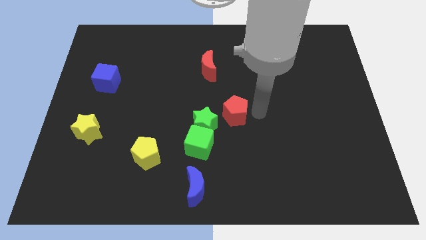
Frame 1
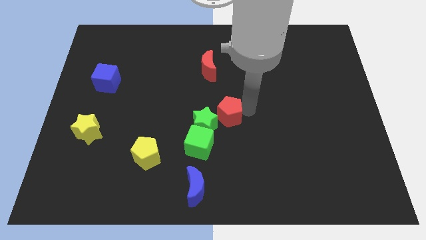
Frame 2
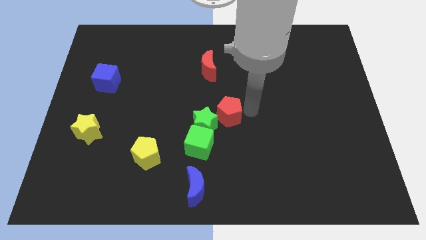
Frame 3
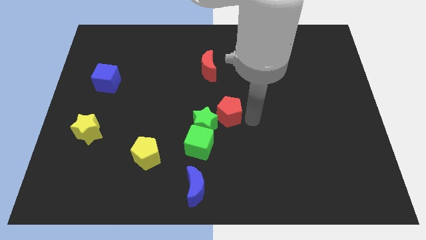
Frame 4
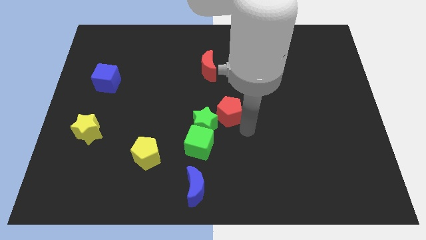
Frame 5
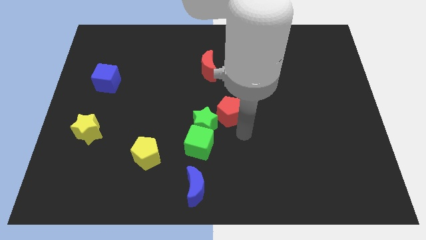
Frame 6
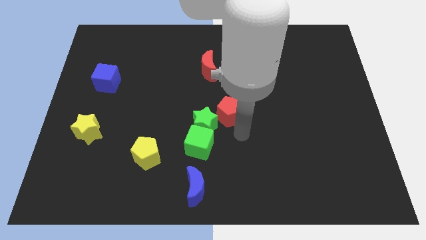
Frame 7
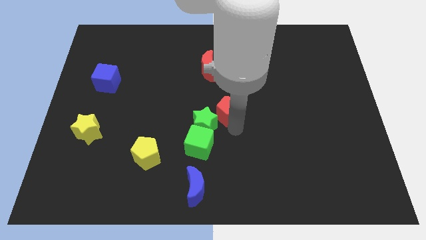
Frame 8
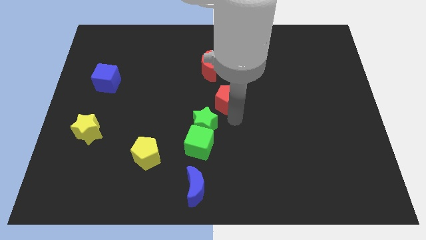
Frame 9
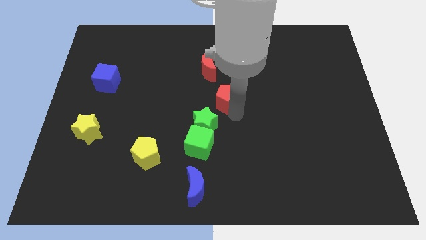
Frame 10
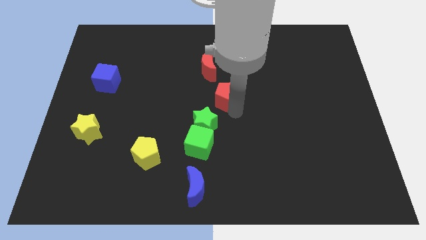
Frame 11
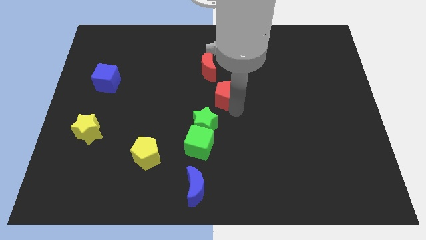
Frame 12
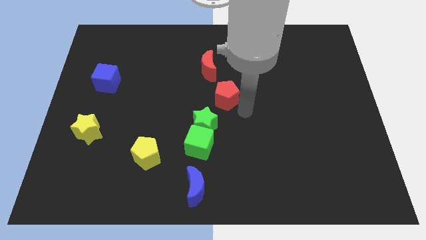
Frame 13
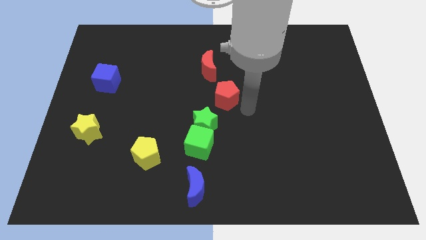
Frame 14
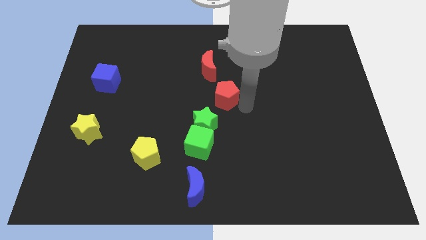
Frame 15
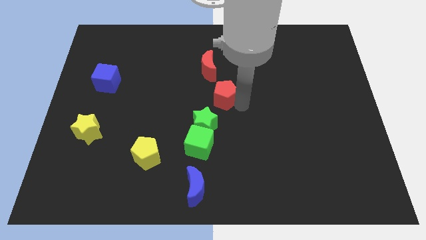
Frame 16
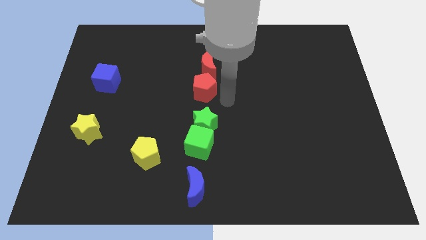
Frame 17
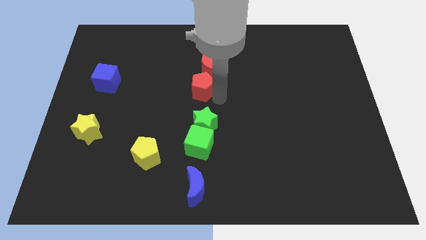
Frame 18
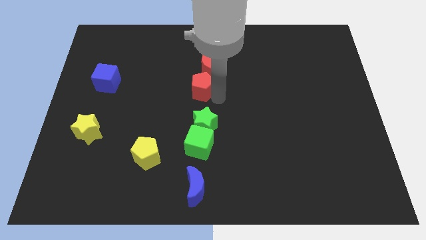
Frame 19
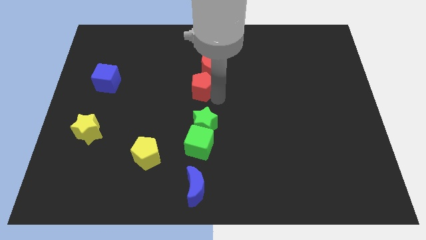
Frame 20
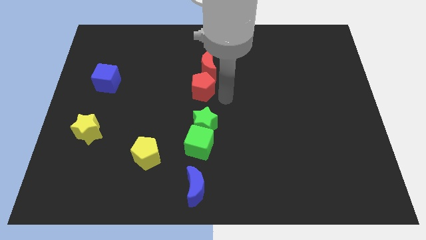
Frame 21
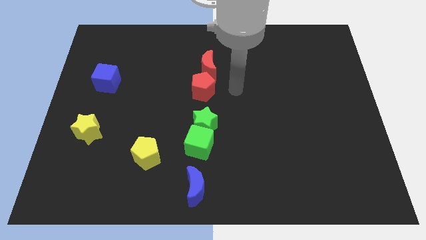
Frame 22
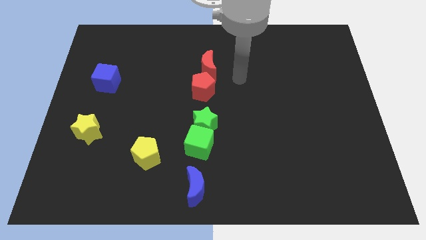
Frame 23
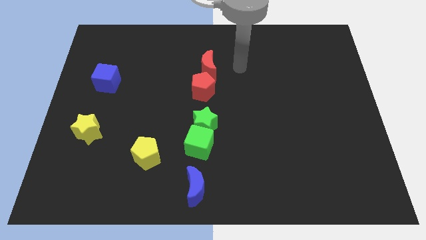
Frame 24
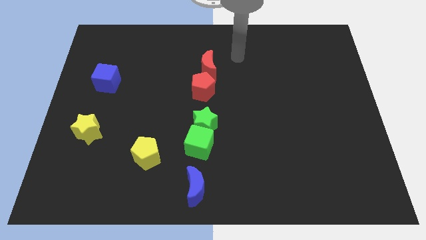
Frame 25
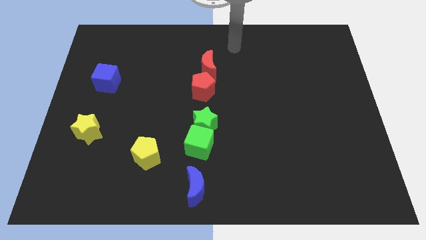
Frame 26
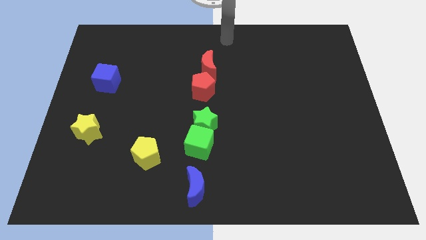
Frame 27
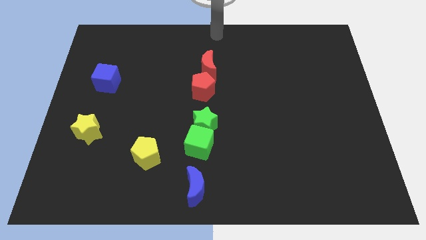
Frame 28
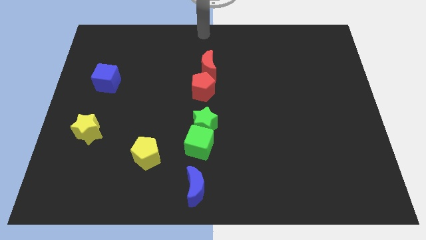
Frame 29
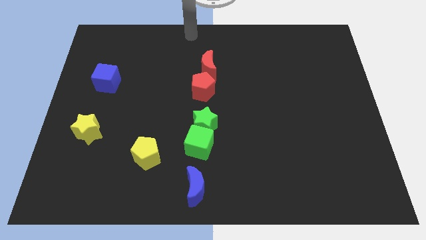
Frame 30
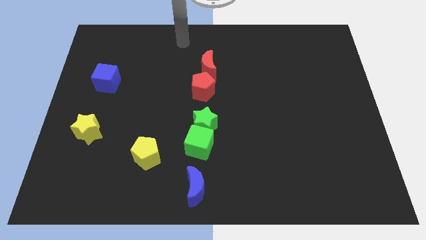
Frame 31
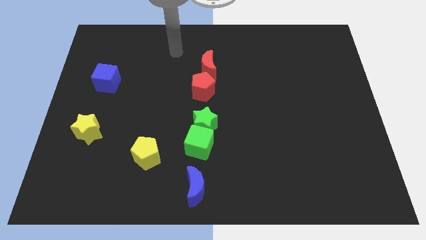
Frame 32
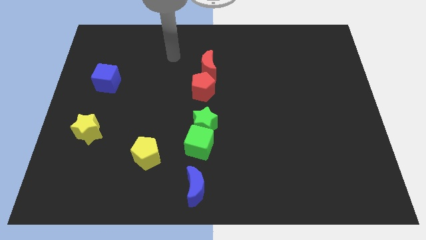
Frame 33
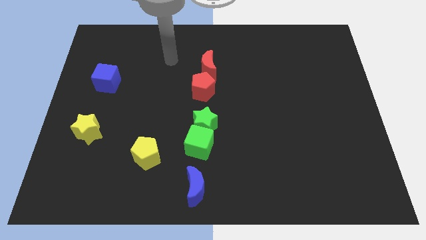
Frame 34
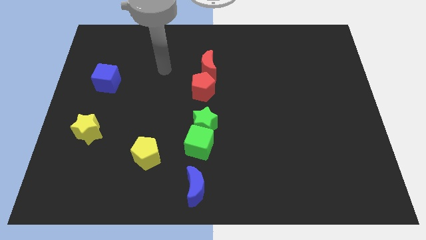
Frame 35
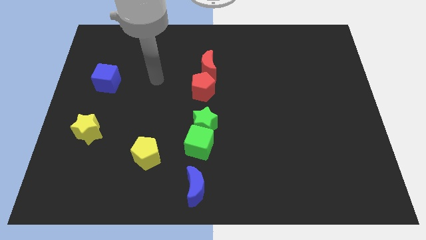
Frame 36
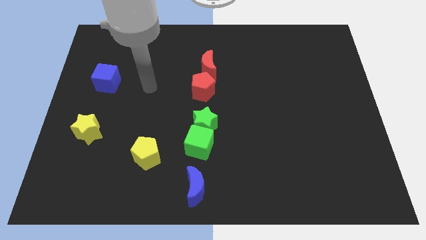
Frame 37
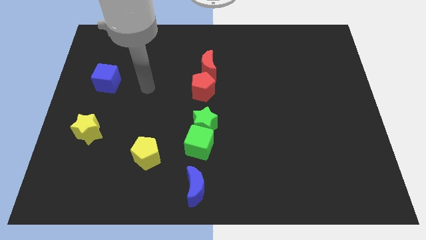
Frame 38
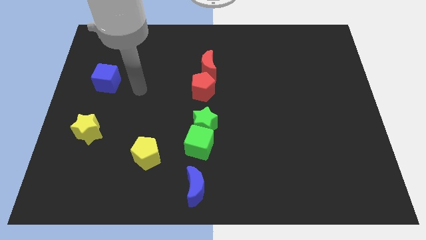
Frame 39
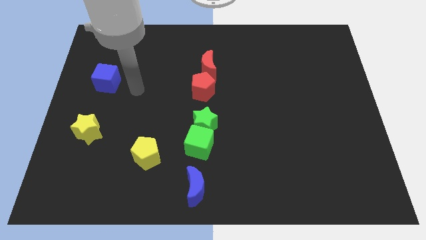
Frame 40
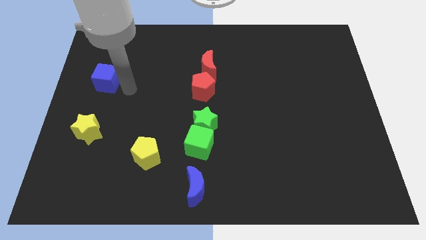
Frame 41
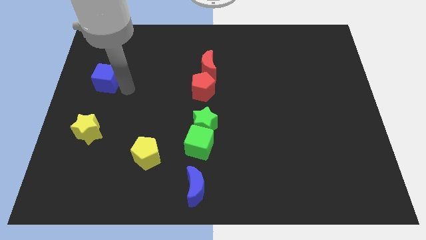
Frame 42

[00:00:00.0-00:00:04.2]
place the red pentagon below the red crescent

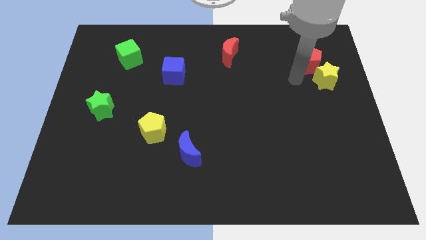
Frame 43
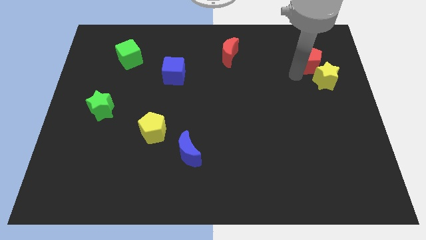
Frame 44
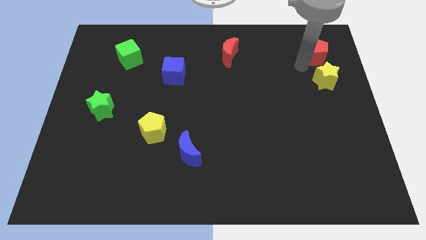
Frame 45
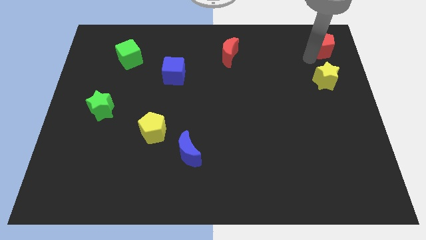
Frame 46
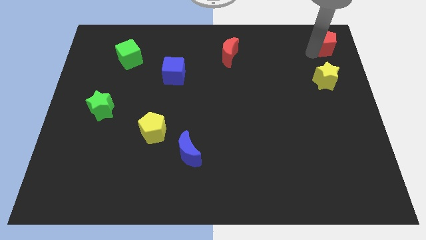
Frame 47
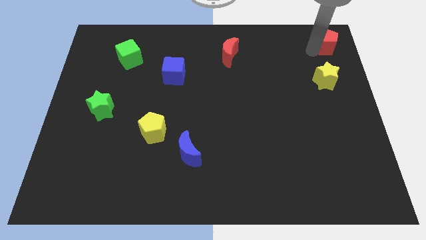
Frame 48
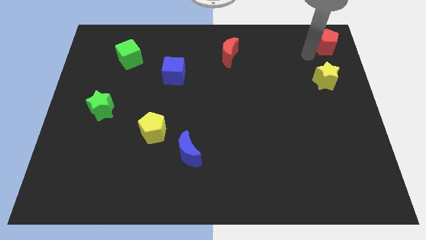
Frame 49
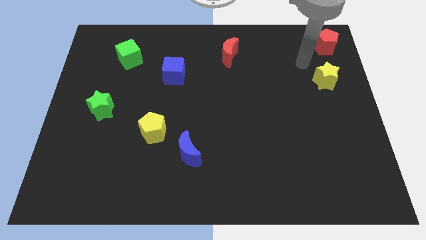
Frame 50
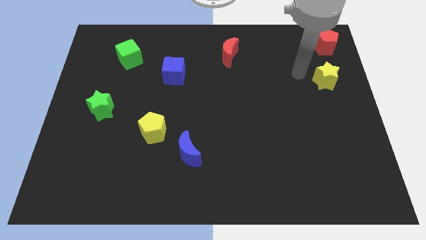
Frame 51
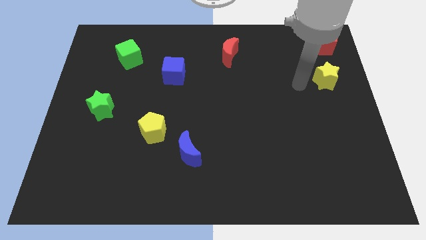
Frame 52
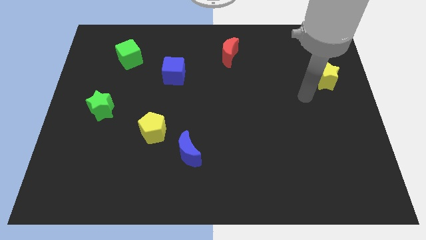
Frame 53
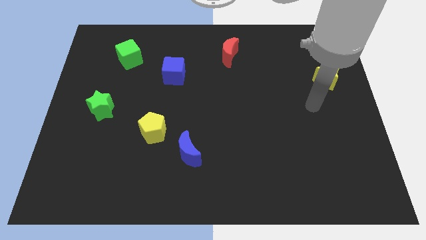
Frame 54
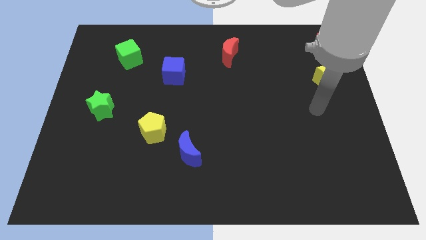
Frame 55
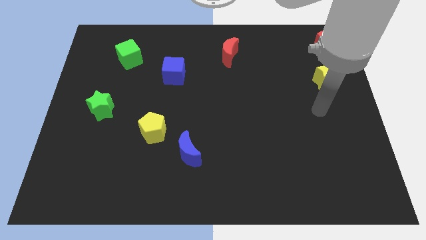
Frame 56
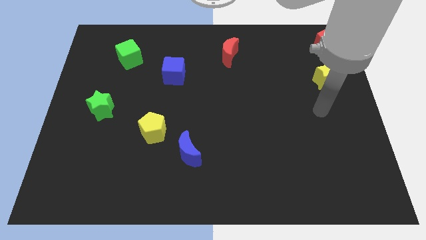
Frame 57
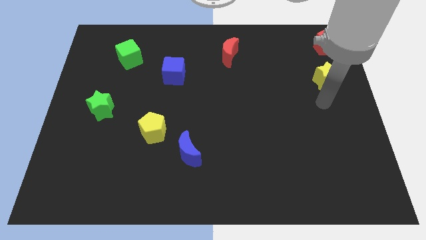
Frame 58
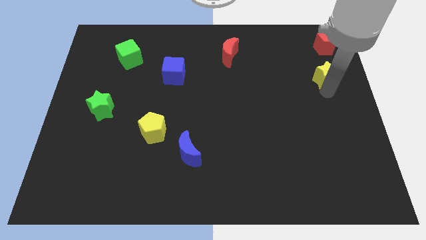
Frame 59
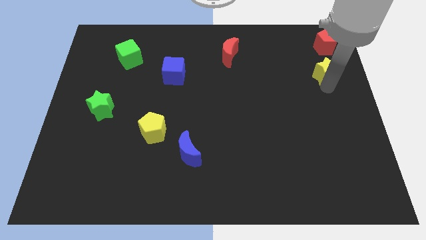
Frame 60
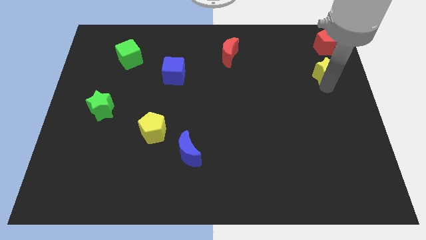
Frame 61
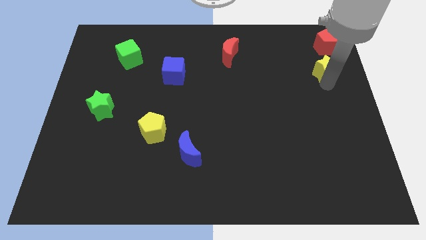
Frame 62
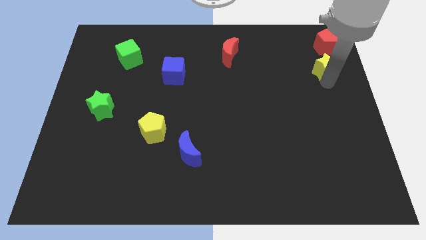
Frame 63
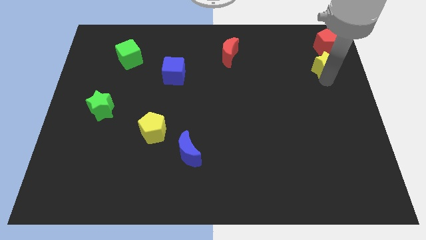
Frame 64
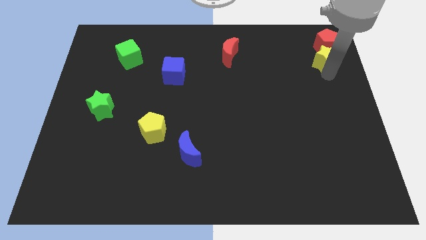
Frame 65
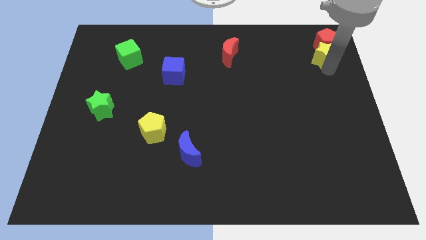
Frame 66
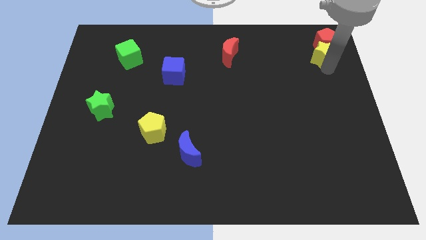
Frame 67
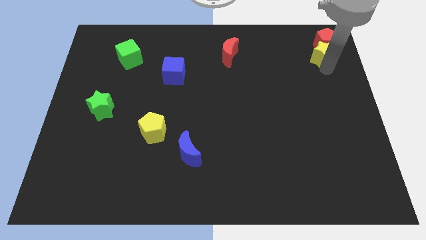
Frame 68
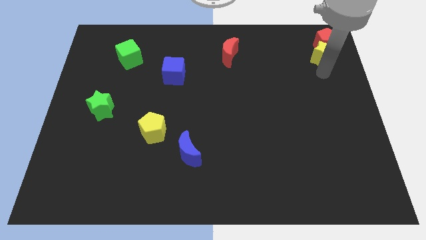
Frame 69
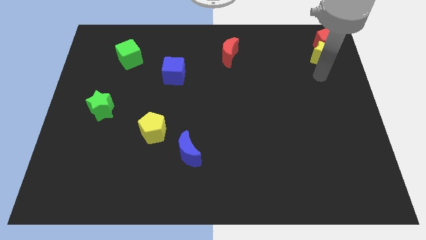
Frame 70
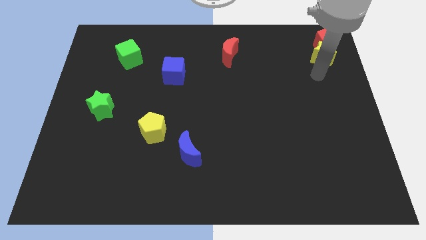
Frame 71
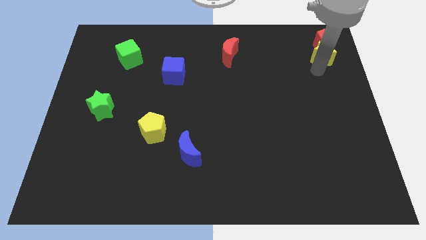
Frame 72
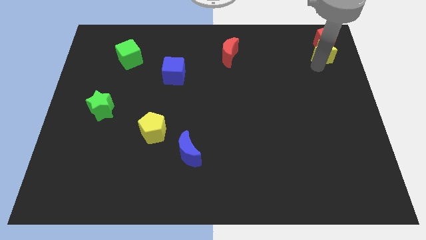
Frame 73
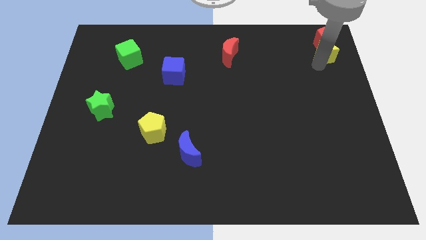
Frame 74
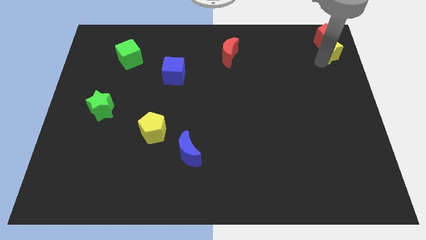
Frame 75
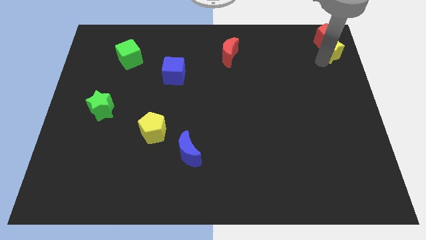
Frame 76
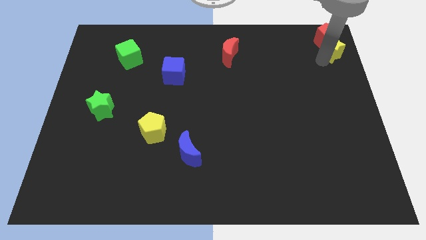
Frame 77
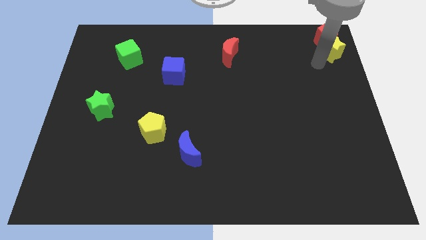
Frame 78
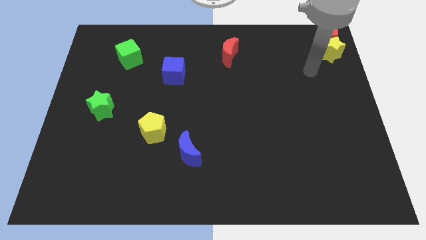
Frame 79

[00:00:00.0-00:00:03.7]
push the yellow star into the red pentagon

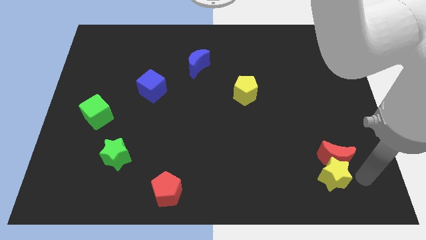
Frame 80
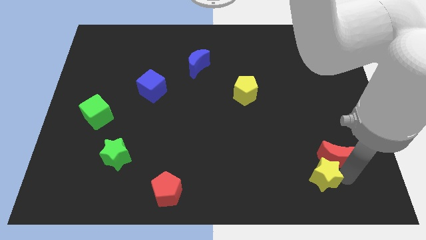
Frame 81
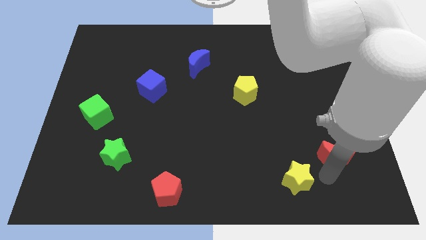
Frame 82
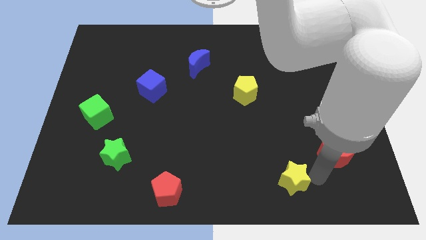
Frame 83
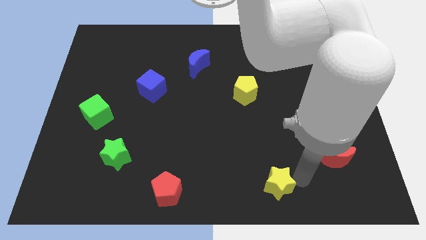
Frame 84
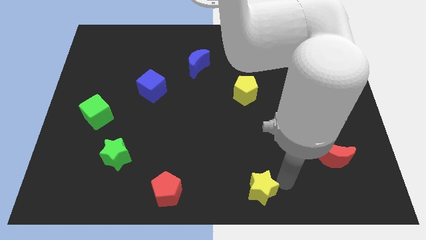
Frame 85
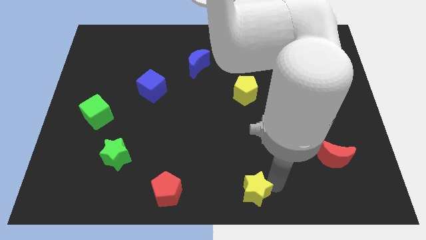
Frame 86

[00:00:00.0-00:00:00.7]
separate the yellow star from the red crescent

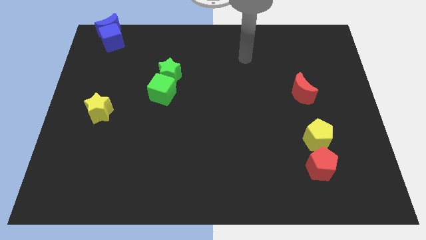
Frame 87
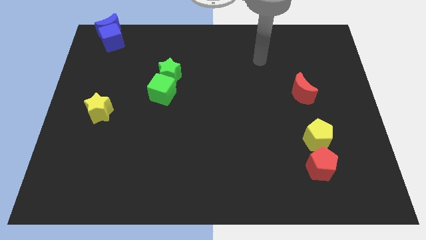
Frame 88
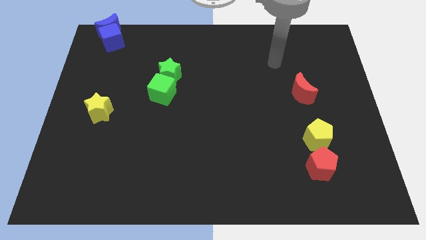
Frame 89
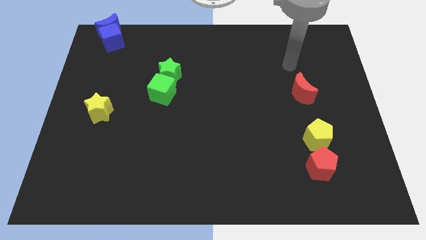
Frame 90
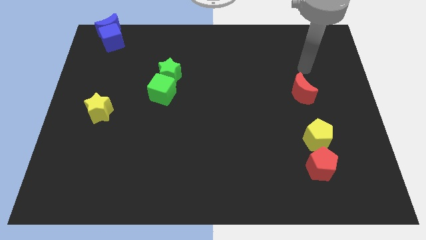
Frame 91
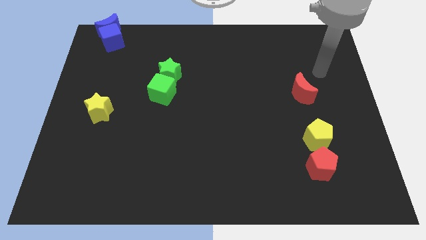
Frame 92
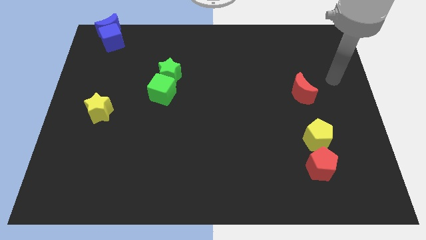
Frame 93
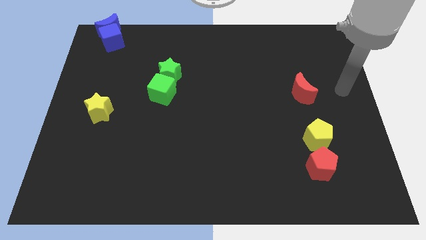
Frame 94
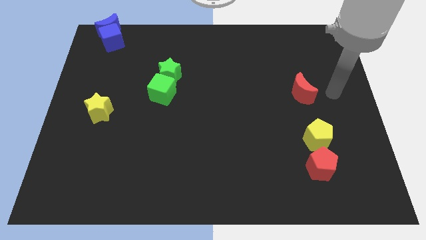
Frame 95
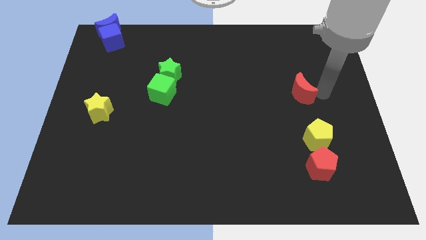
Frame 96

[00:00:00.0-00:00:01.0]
point your arm to the right side of red moon
